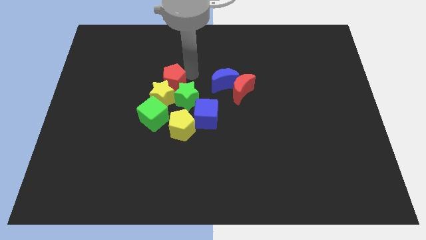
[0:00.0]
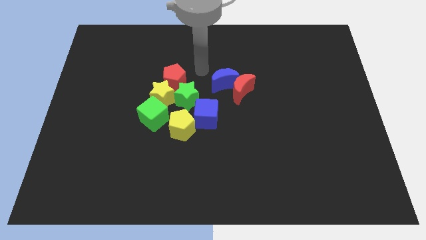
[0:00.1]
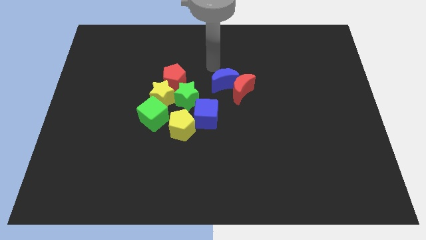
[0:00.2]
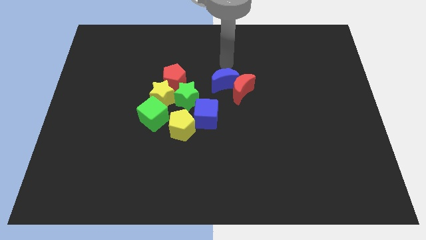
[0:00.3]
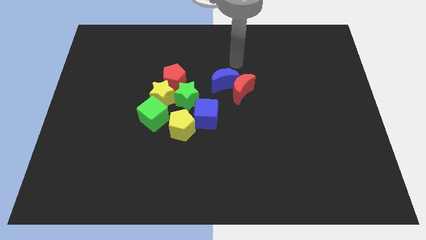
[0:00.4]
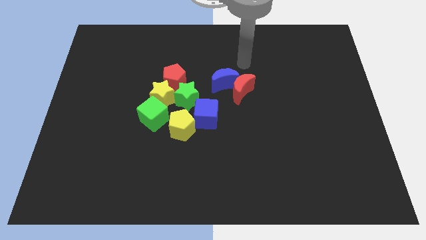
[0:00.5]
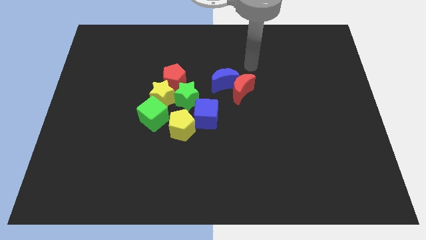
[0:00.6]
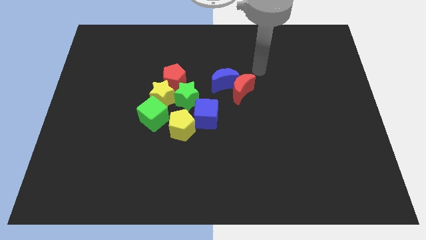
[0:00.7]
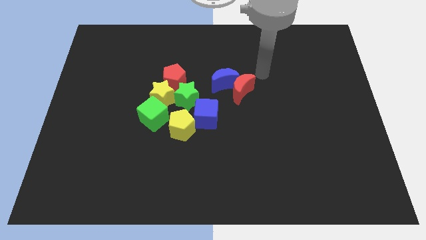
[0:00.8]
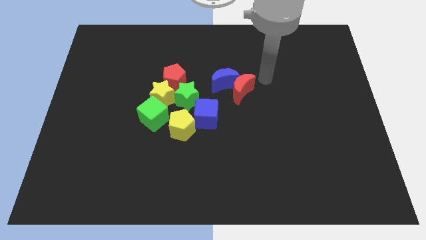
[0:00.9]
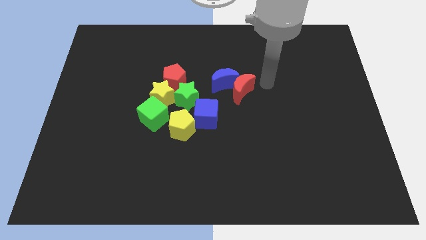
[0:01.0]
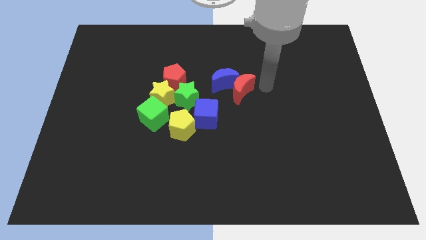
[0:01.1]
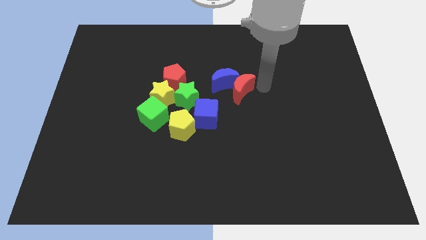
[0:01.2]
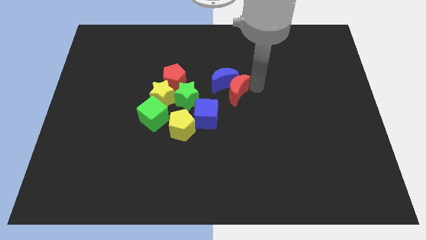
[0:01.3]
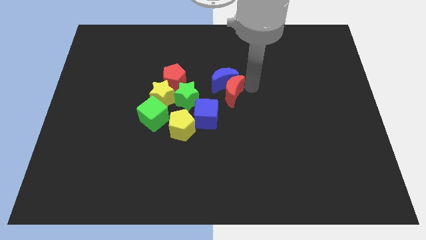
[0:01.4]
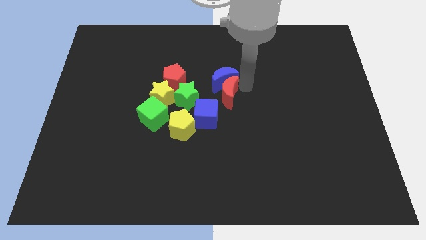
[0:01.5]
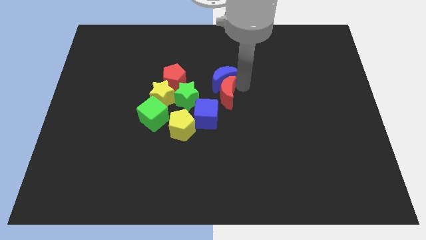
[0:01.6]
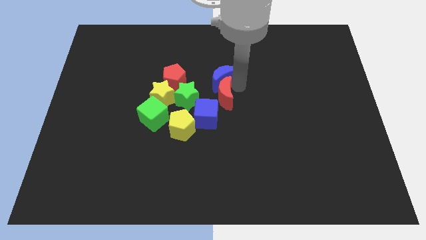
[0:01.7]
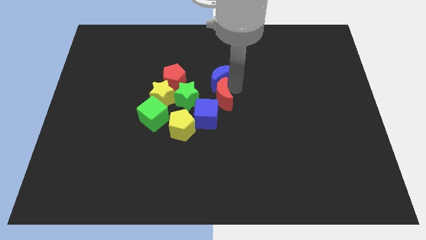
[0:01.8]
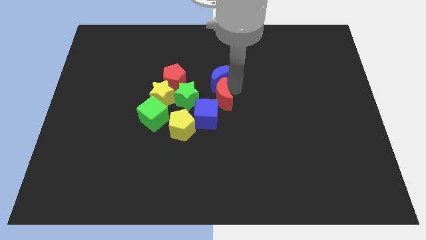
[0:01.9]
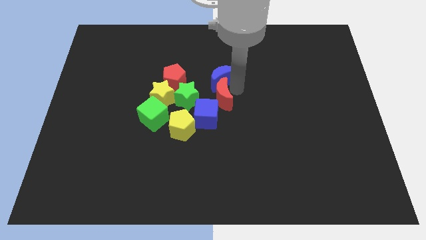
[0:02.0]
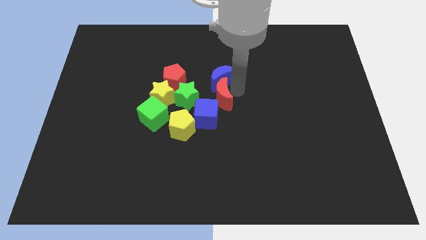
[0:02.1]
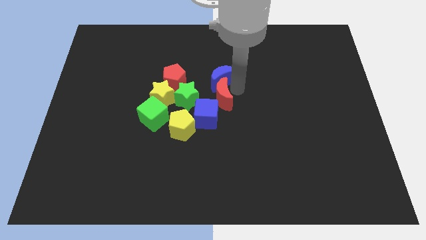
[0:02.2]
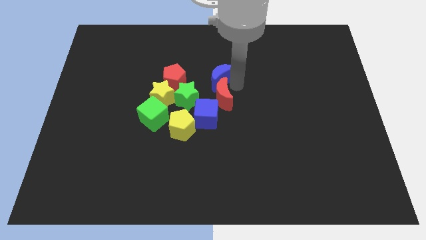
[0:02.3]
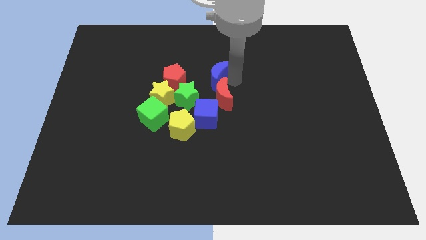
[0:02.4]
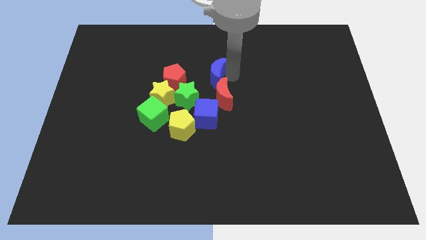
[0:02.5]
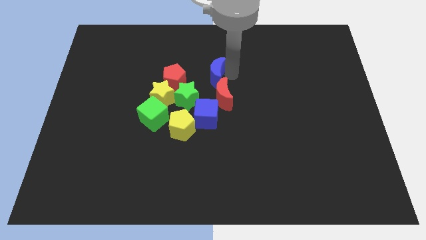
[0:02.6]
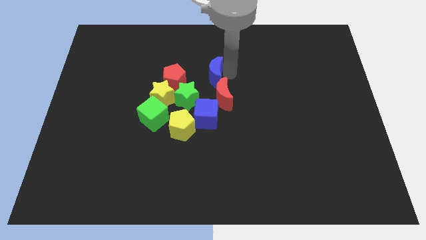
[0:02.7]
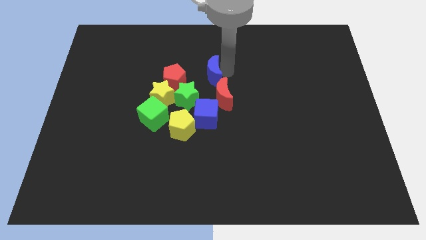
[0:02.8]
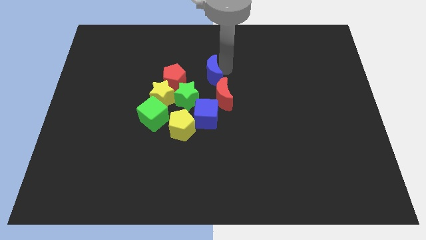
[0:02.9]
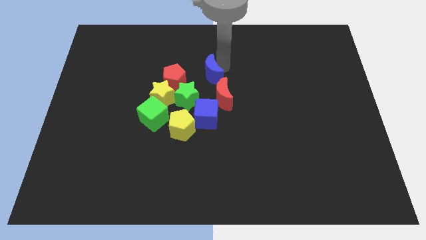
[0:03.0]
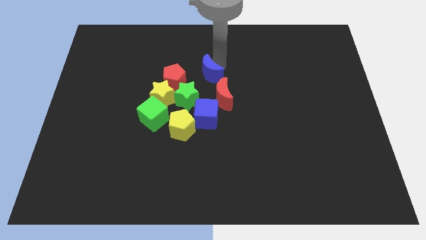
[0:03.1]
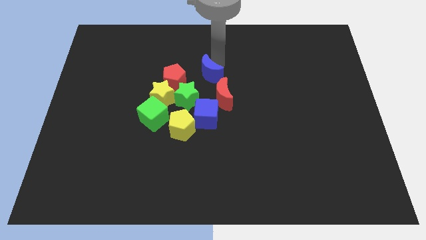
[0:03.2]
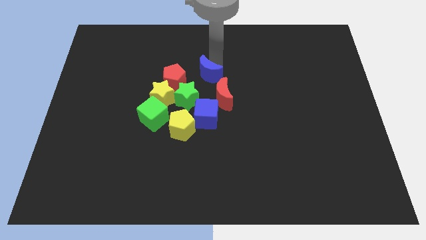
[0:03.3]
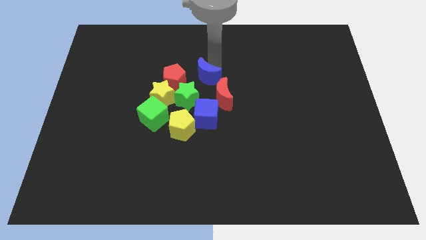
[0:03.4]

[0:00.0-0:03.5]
separate the blue moon from the red moon

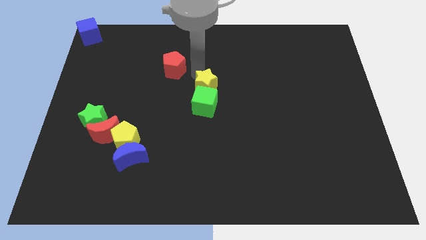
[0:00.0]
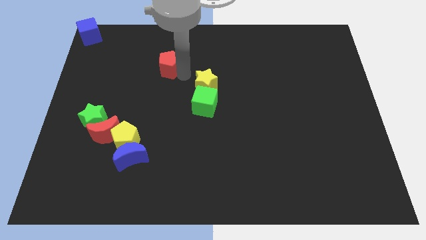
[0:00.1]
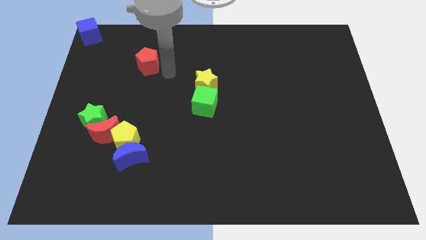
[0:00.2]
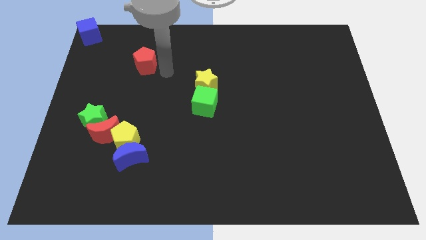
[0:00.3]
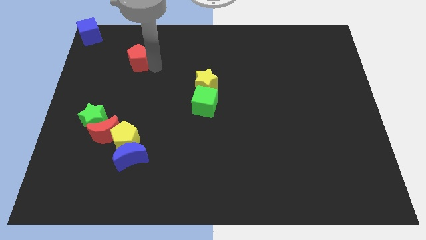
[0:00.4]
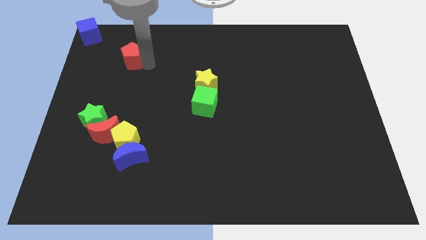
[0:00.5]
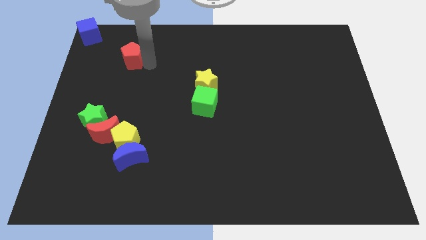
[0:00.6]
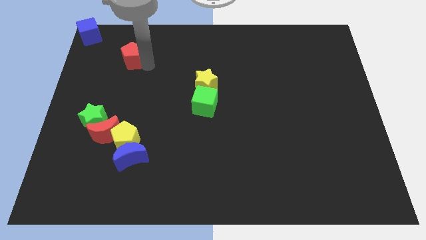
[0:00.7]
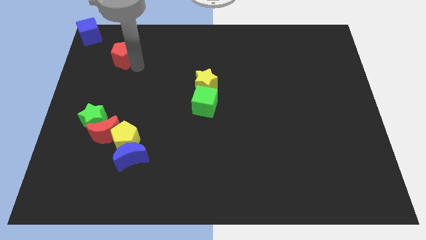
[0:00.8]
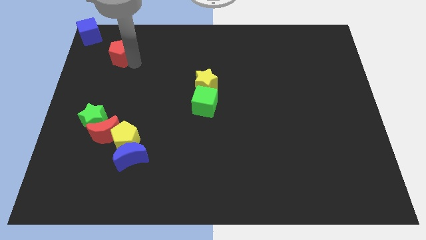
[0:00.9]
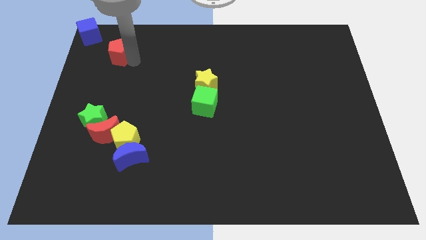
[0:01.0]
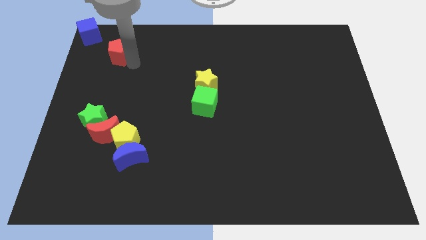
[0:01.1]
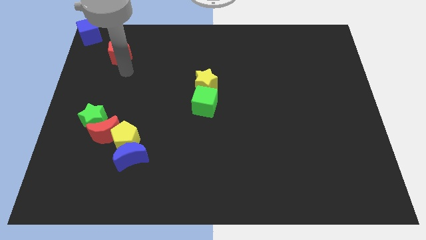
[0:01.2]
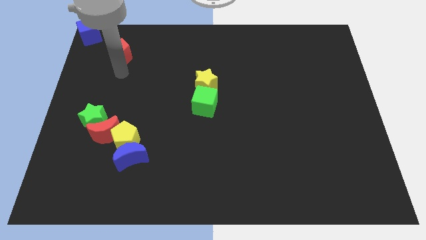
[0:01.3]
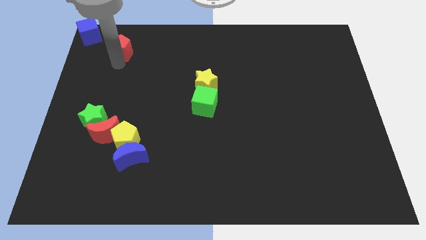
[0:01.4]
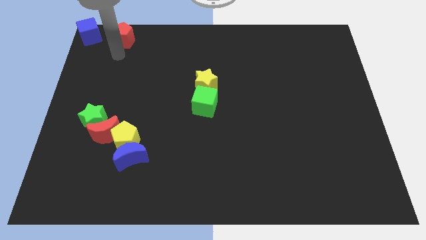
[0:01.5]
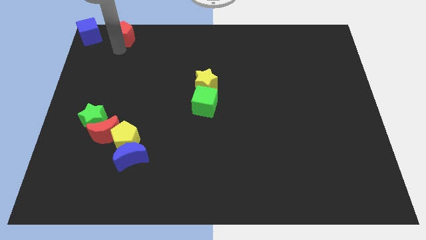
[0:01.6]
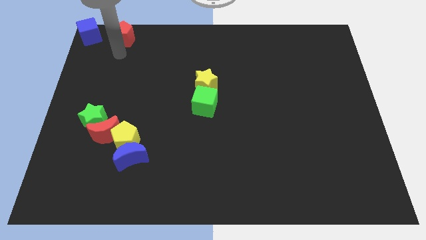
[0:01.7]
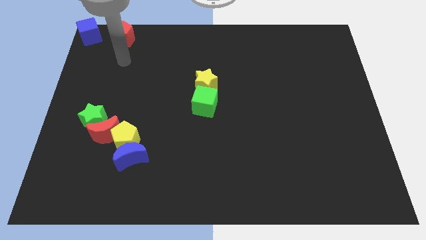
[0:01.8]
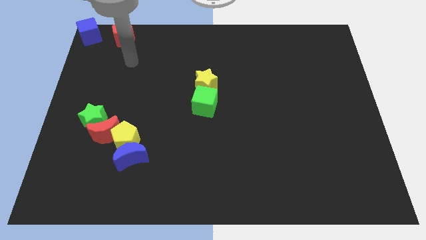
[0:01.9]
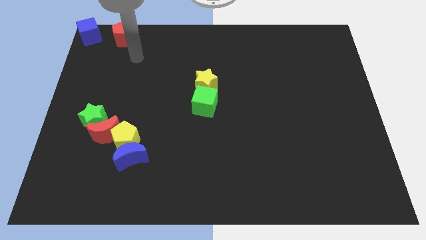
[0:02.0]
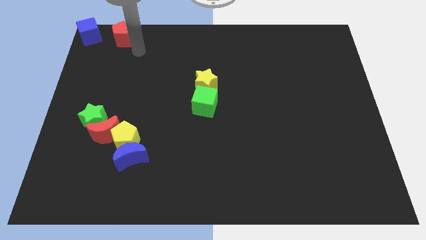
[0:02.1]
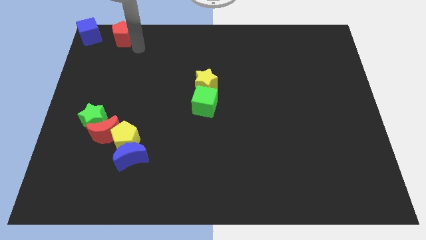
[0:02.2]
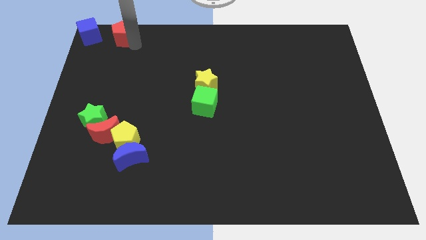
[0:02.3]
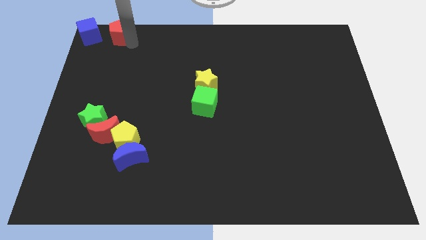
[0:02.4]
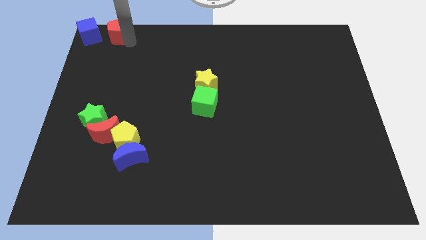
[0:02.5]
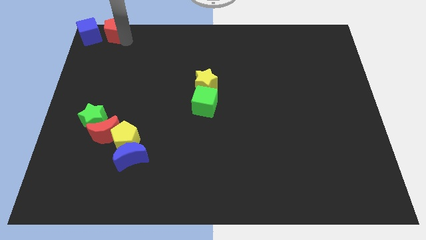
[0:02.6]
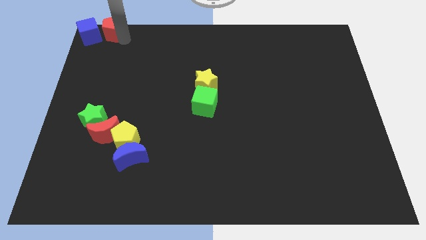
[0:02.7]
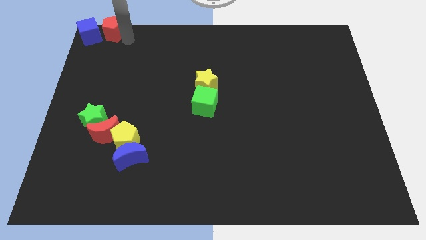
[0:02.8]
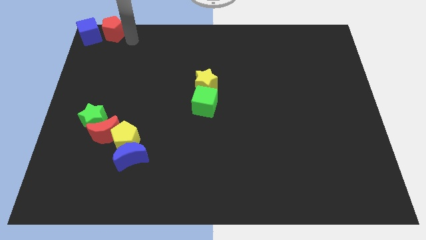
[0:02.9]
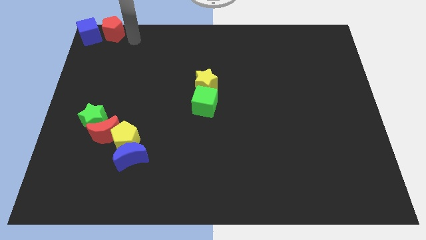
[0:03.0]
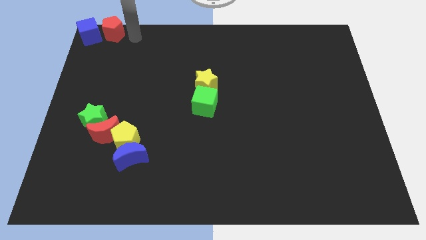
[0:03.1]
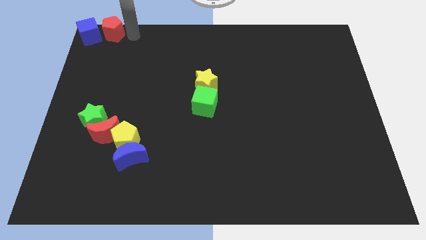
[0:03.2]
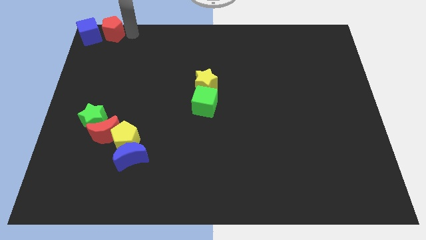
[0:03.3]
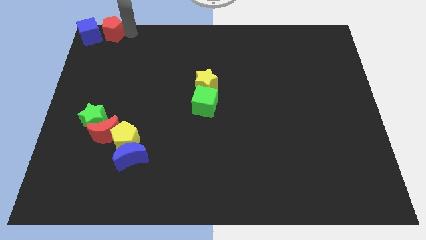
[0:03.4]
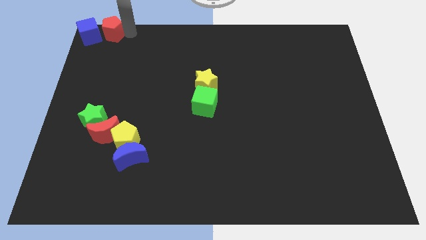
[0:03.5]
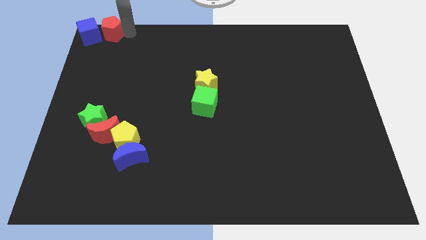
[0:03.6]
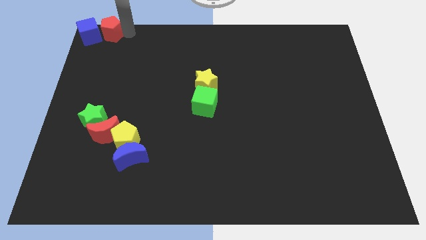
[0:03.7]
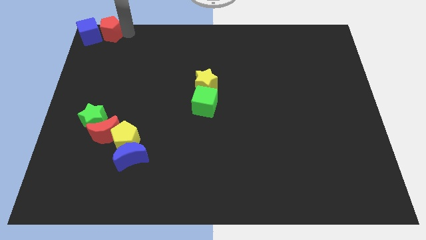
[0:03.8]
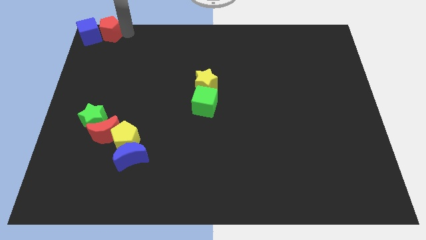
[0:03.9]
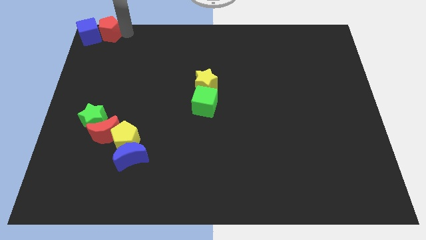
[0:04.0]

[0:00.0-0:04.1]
move the red pentagon into the right side of the blue cube

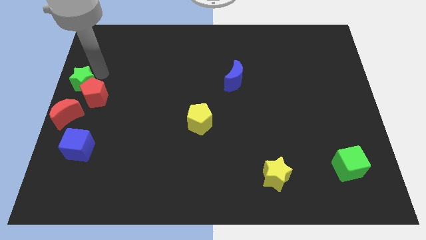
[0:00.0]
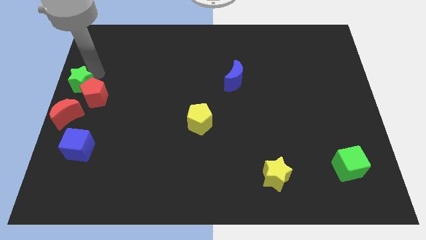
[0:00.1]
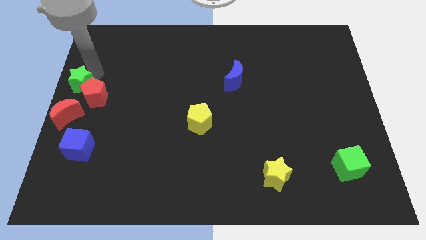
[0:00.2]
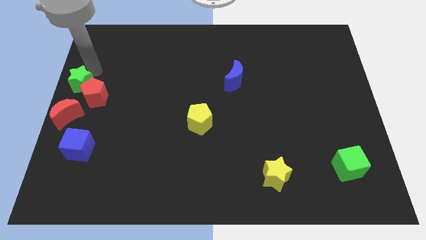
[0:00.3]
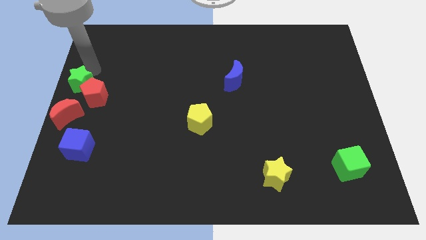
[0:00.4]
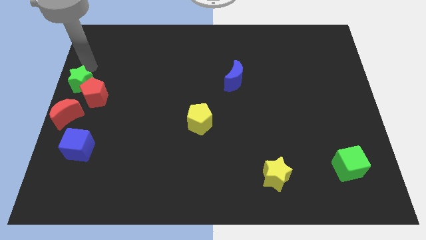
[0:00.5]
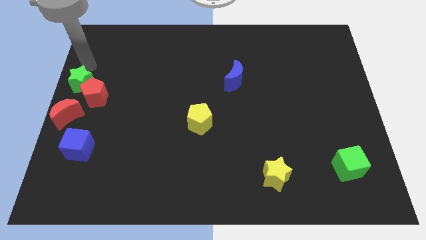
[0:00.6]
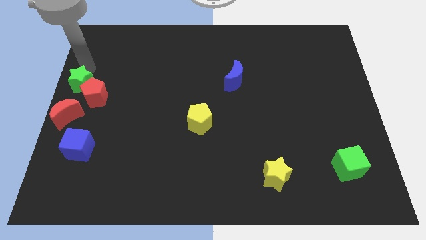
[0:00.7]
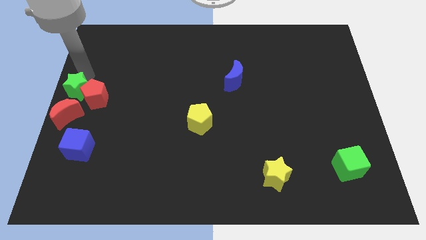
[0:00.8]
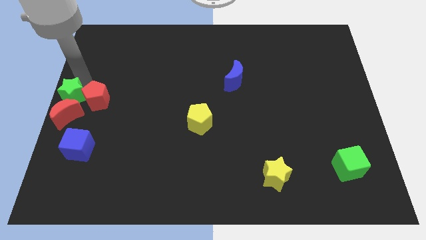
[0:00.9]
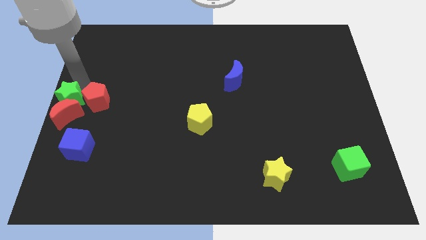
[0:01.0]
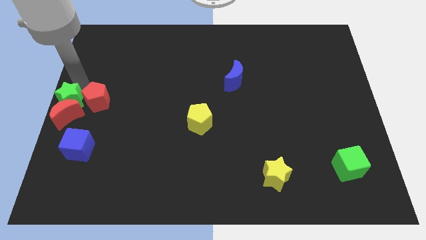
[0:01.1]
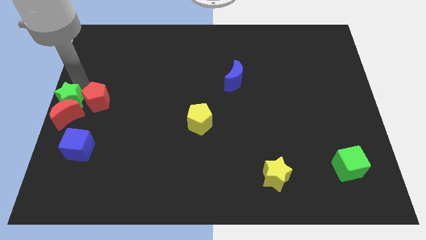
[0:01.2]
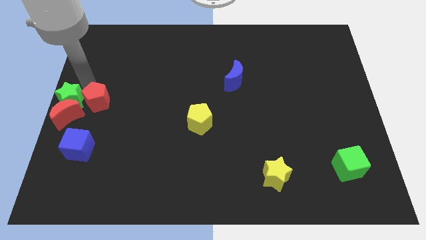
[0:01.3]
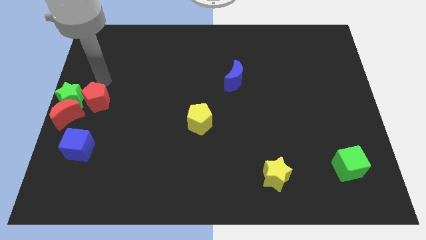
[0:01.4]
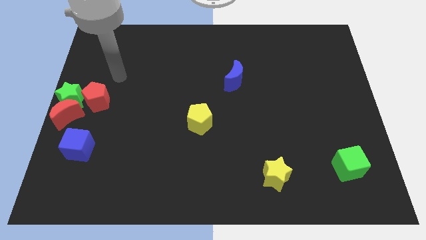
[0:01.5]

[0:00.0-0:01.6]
put the green star into the red moon
